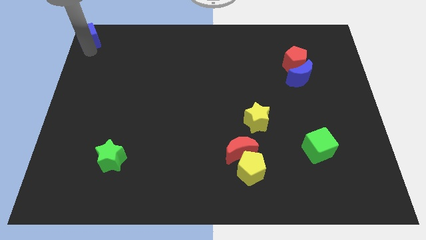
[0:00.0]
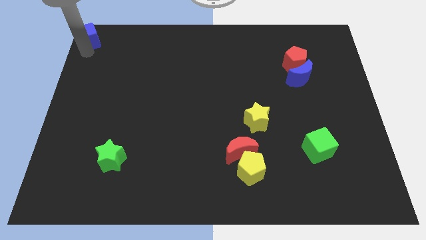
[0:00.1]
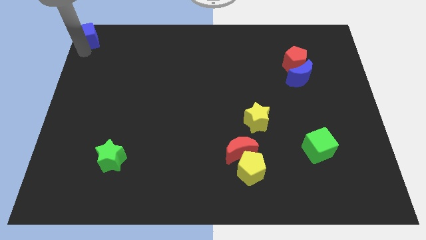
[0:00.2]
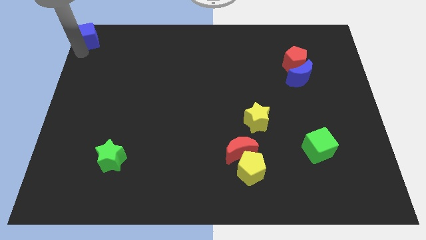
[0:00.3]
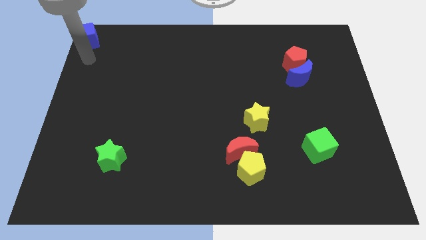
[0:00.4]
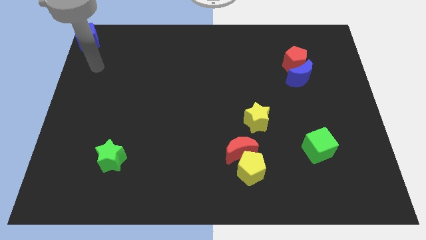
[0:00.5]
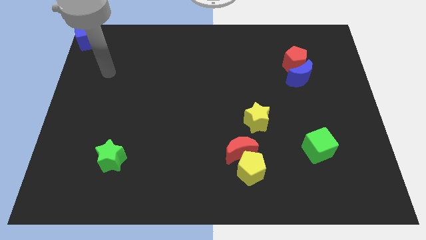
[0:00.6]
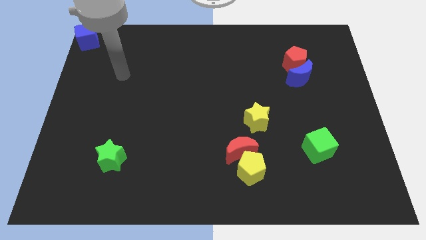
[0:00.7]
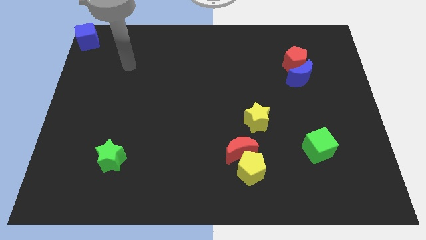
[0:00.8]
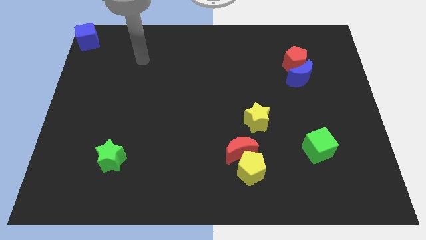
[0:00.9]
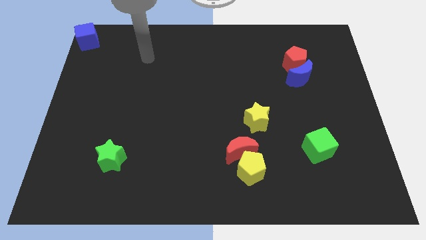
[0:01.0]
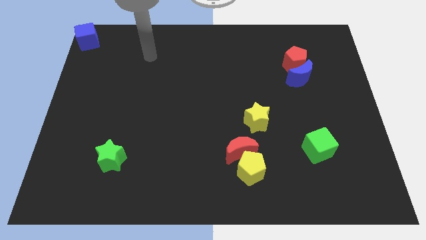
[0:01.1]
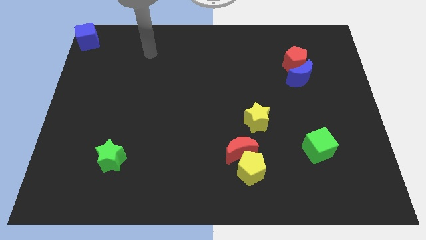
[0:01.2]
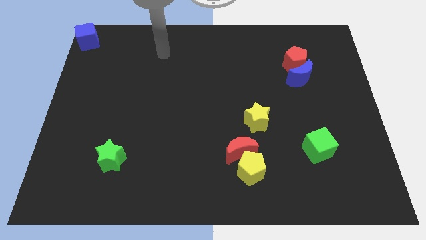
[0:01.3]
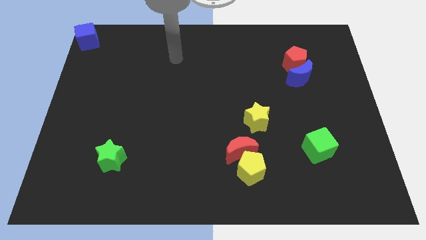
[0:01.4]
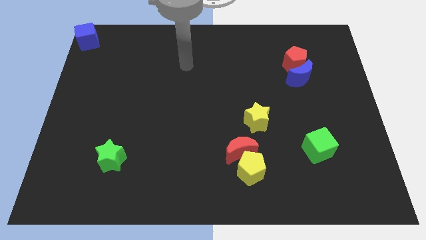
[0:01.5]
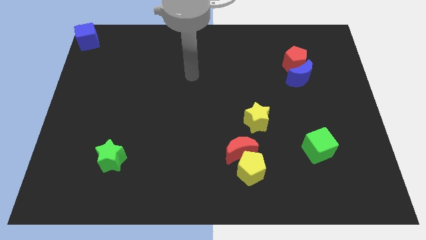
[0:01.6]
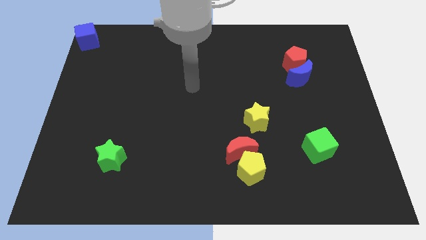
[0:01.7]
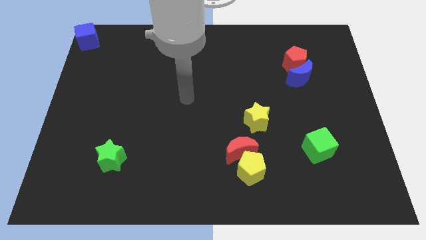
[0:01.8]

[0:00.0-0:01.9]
move the arm center of the board

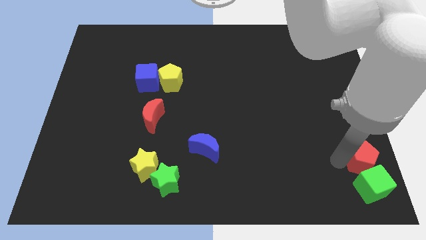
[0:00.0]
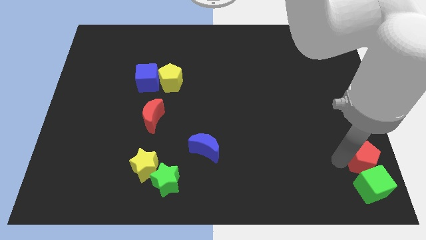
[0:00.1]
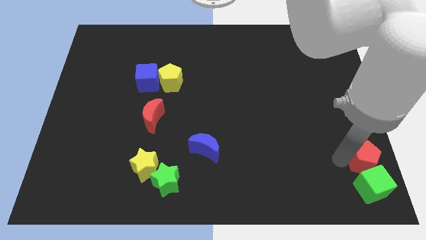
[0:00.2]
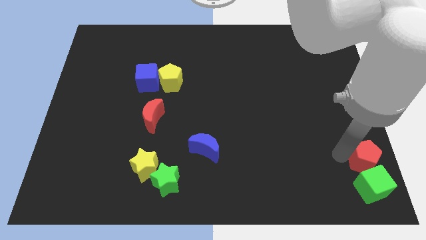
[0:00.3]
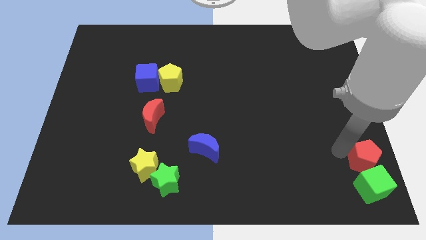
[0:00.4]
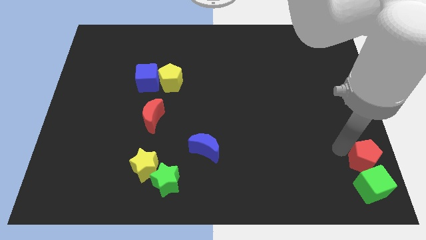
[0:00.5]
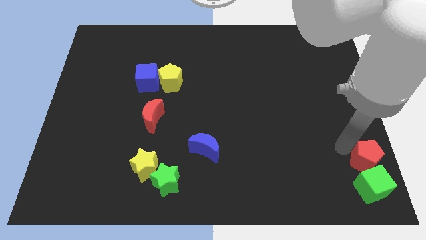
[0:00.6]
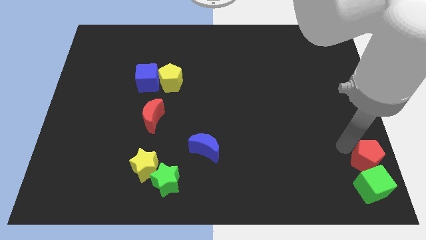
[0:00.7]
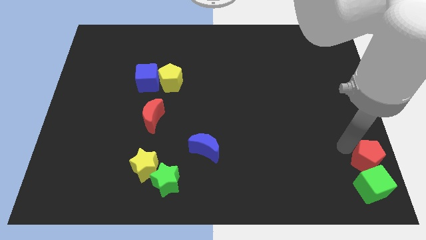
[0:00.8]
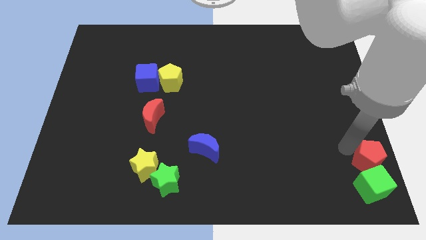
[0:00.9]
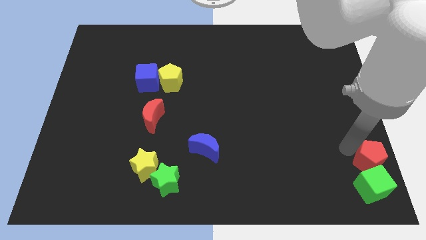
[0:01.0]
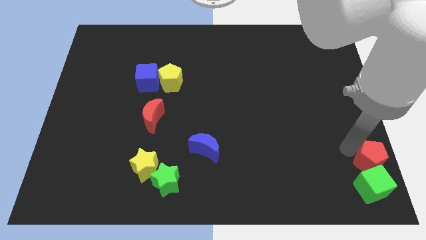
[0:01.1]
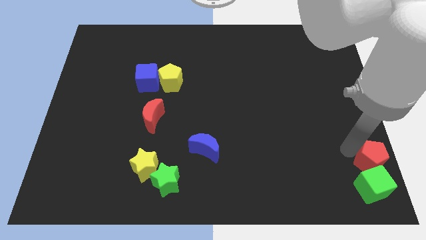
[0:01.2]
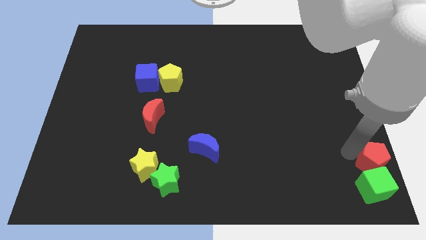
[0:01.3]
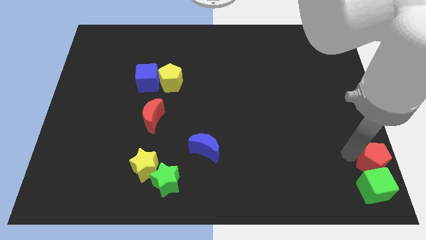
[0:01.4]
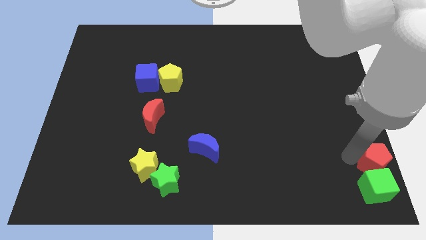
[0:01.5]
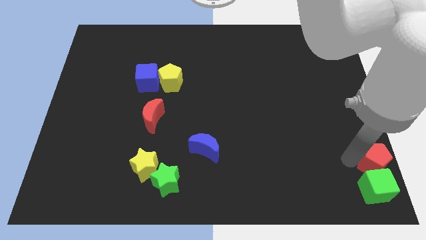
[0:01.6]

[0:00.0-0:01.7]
place the red pentagon on top of the green cube

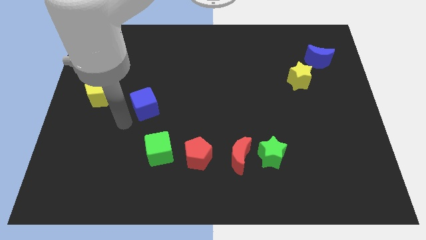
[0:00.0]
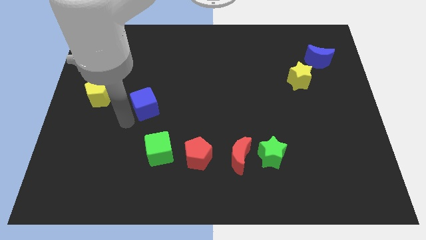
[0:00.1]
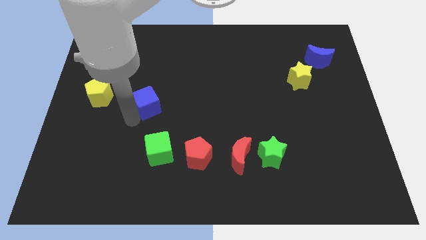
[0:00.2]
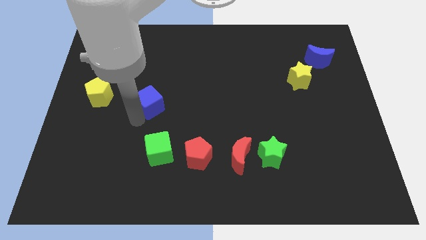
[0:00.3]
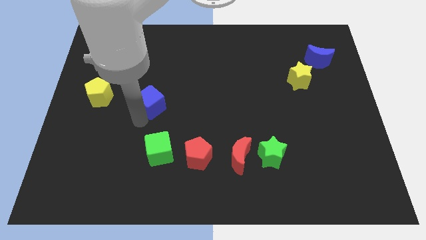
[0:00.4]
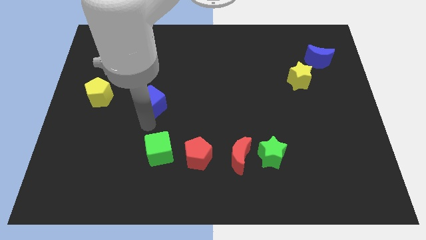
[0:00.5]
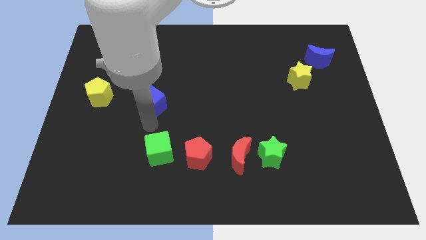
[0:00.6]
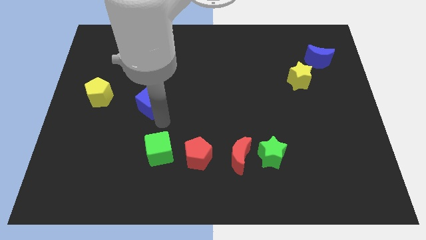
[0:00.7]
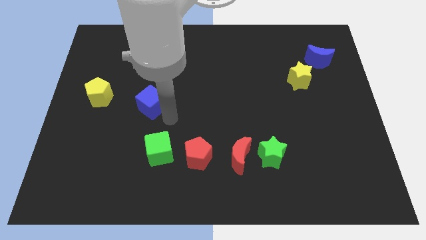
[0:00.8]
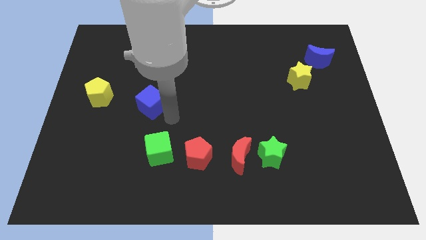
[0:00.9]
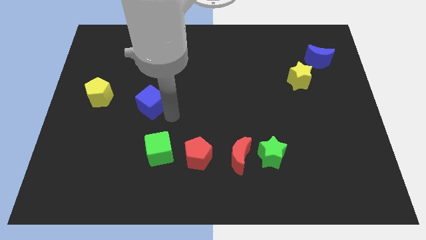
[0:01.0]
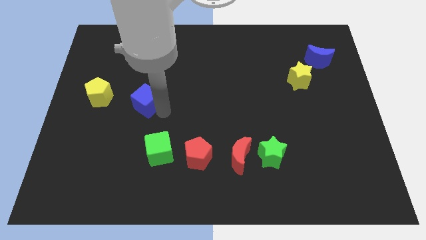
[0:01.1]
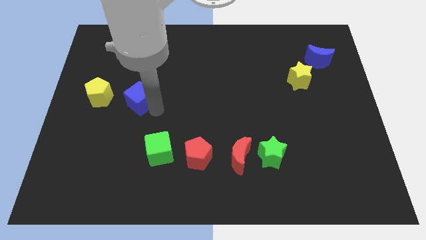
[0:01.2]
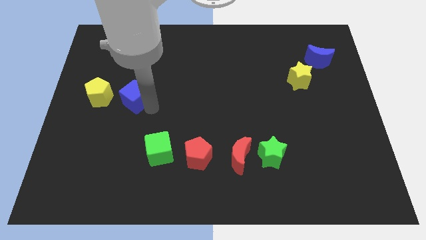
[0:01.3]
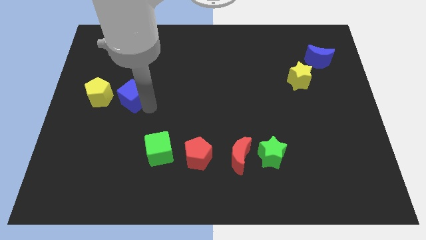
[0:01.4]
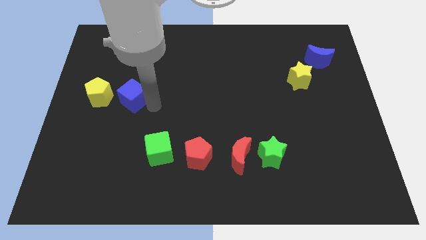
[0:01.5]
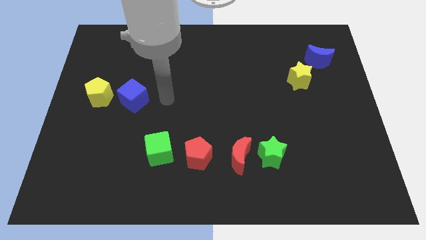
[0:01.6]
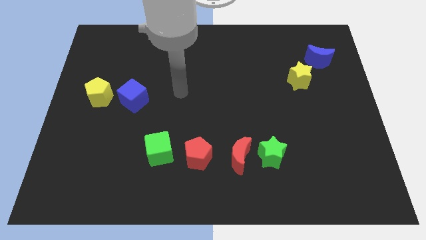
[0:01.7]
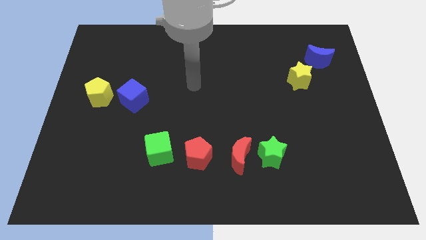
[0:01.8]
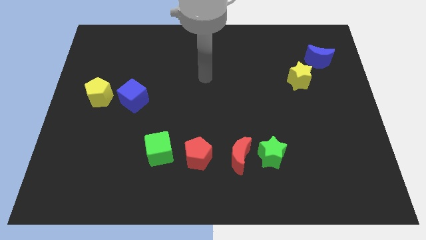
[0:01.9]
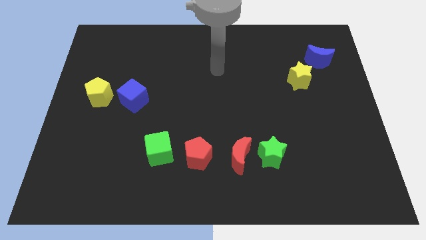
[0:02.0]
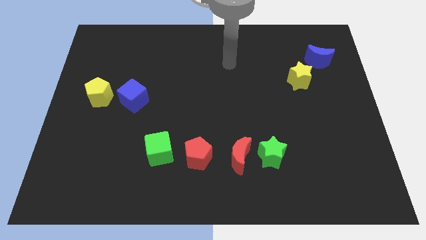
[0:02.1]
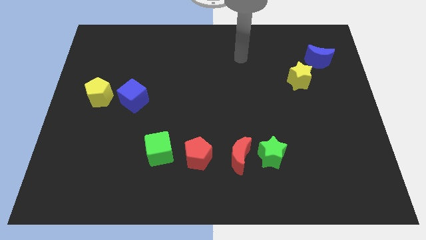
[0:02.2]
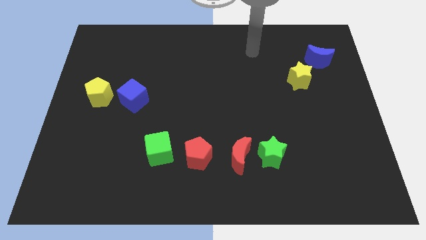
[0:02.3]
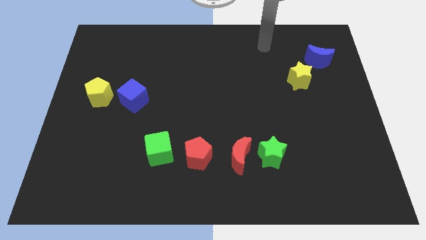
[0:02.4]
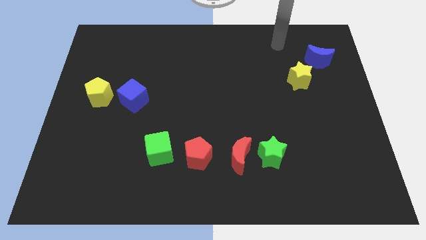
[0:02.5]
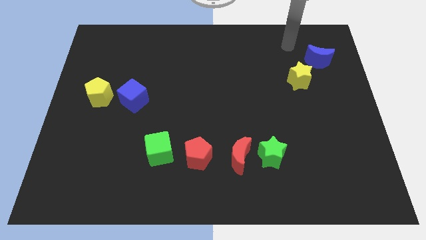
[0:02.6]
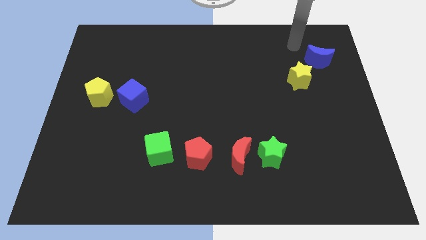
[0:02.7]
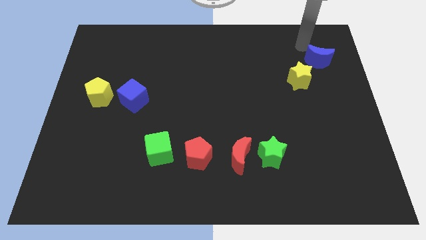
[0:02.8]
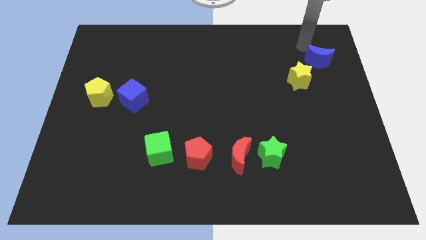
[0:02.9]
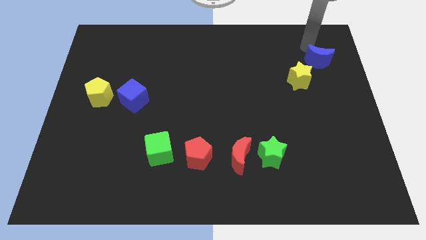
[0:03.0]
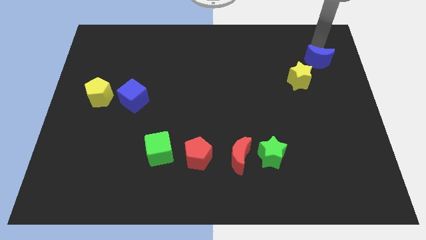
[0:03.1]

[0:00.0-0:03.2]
move the blue cube slightly close to the yellow pentagon

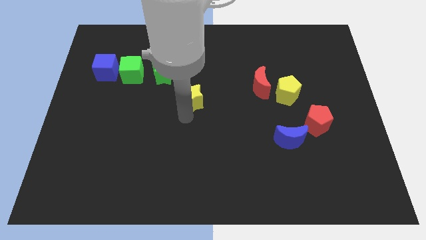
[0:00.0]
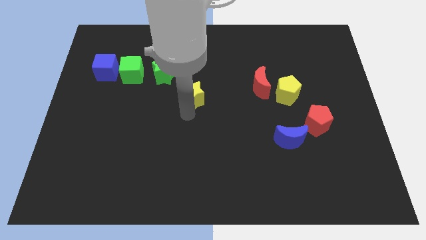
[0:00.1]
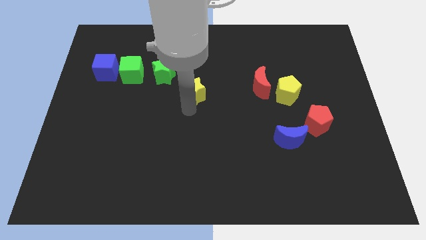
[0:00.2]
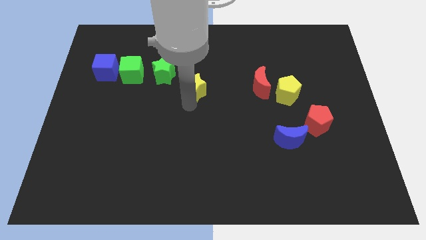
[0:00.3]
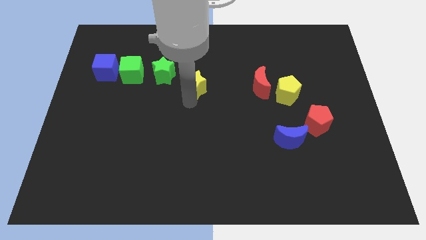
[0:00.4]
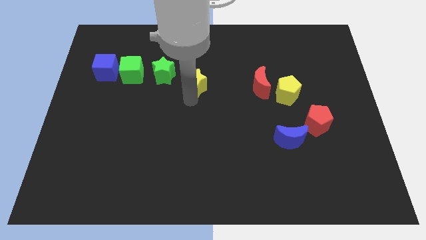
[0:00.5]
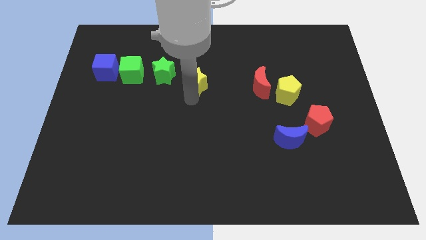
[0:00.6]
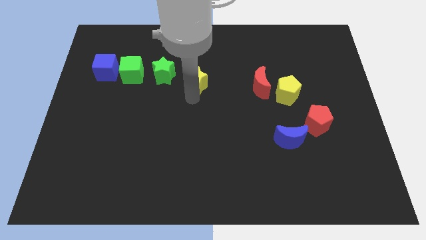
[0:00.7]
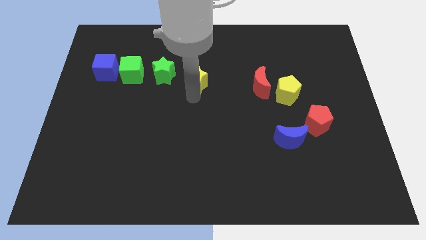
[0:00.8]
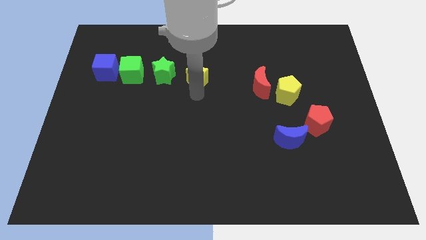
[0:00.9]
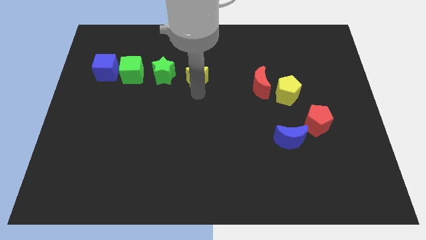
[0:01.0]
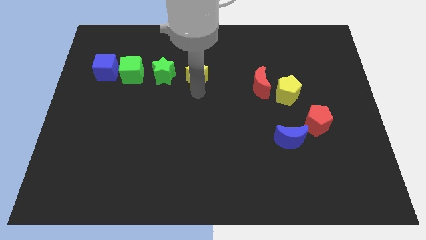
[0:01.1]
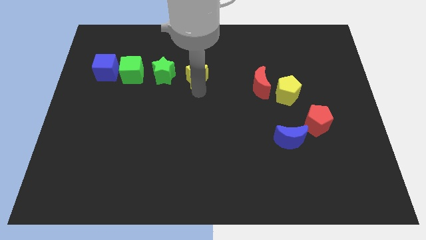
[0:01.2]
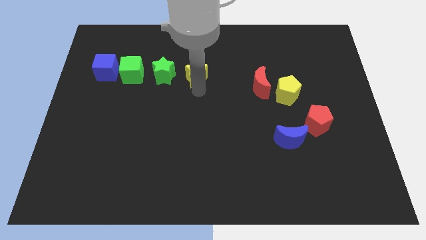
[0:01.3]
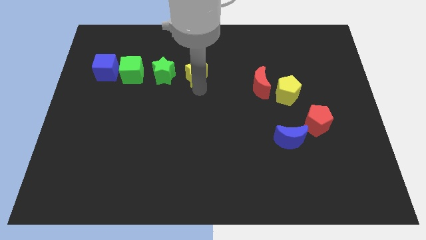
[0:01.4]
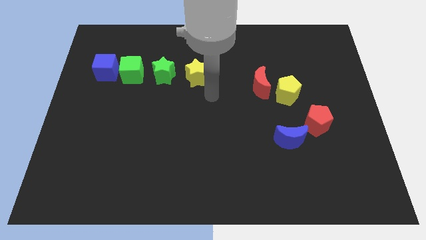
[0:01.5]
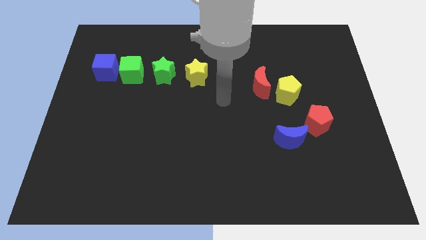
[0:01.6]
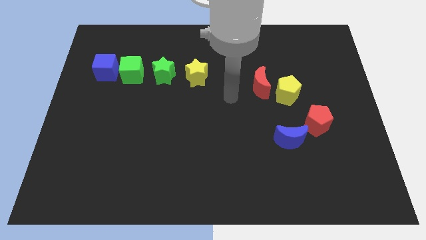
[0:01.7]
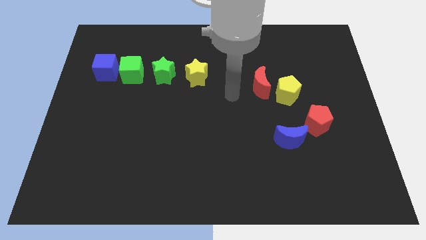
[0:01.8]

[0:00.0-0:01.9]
move the yellow star to the right side of the green star

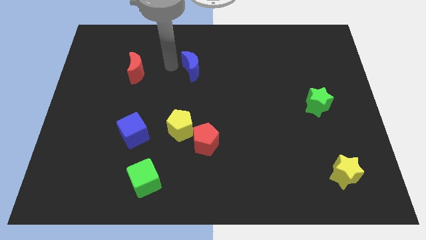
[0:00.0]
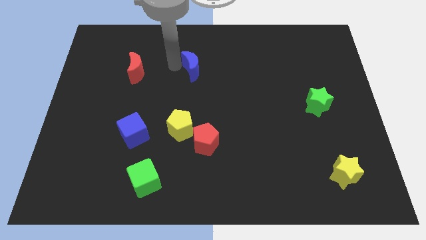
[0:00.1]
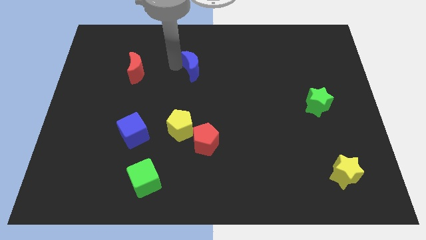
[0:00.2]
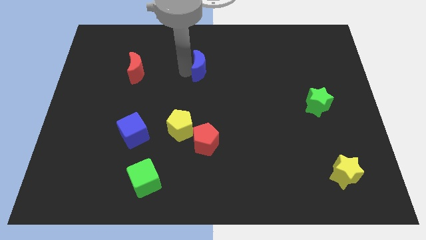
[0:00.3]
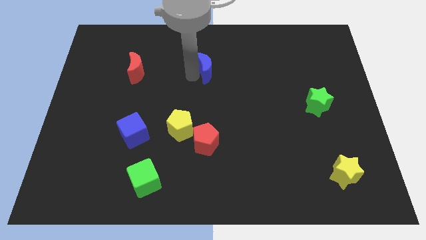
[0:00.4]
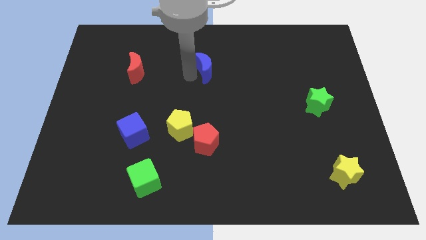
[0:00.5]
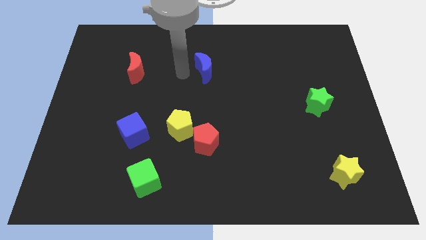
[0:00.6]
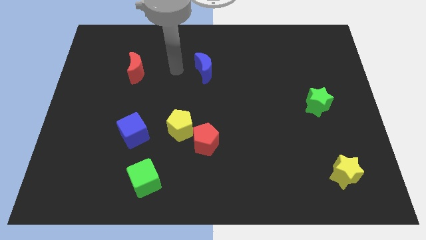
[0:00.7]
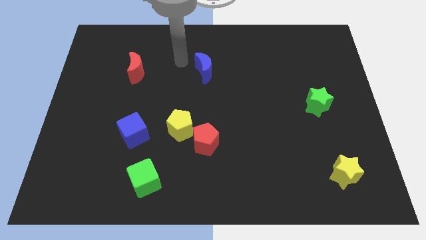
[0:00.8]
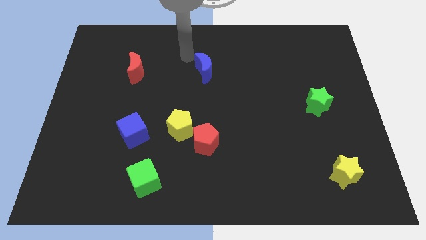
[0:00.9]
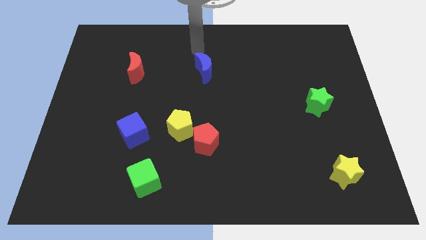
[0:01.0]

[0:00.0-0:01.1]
separate the blue crescent from red crescent
